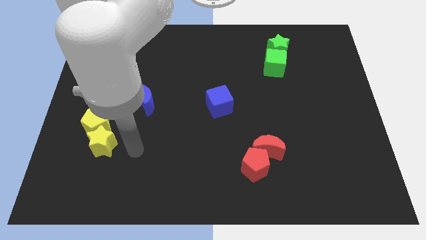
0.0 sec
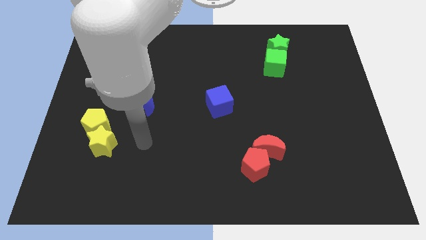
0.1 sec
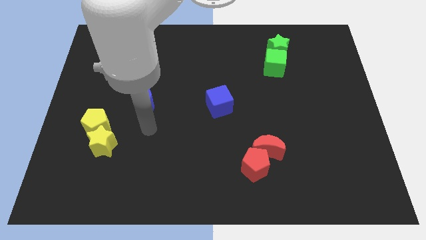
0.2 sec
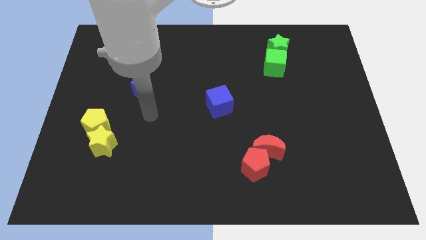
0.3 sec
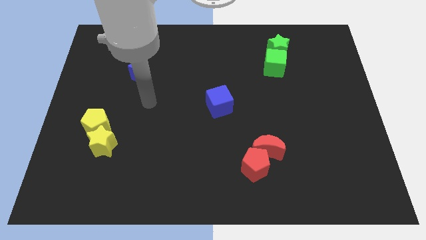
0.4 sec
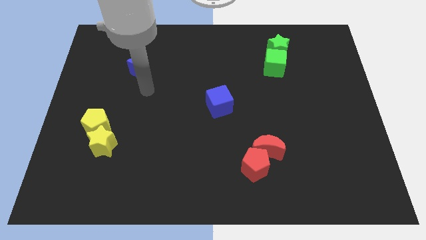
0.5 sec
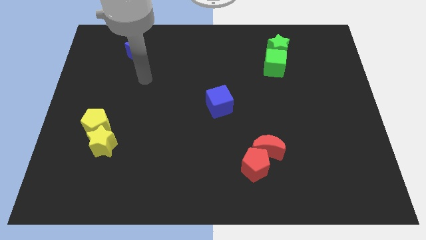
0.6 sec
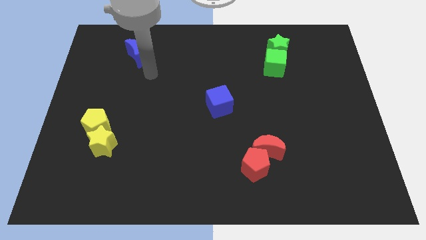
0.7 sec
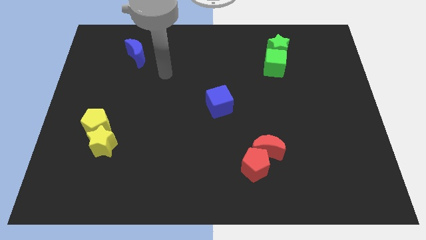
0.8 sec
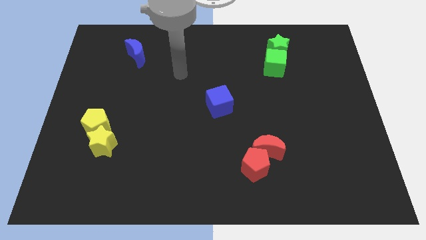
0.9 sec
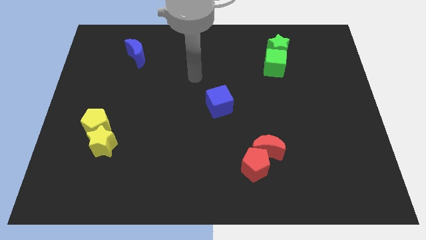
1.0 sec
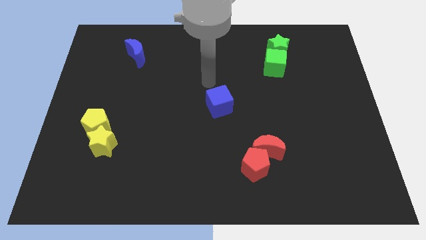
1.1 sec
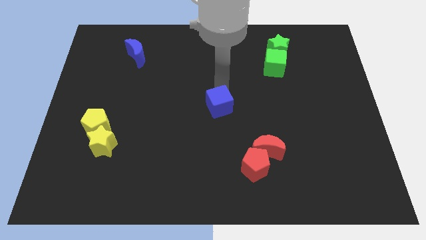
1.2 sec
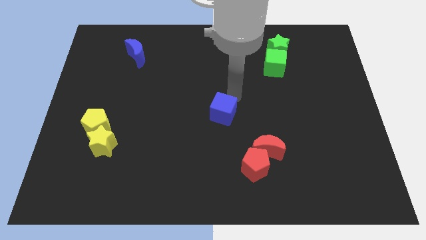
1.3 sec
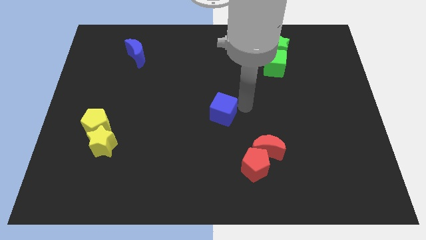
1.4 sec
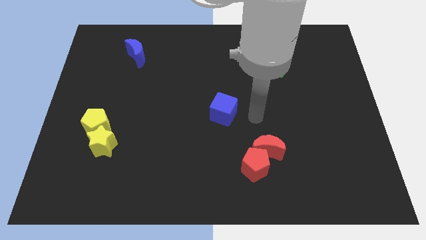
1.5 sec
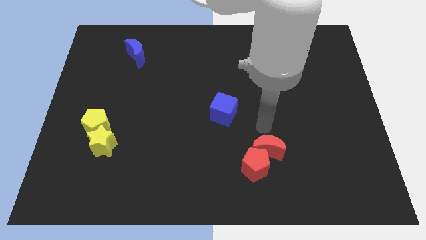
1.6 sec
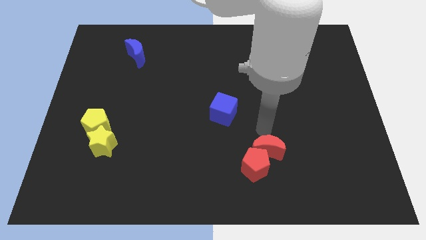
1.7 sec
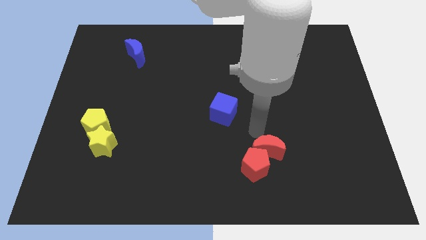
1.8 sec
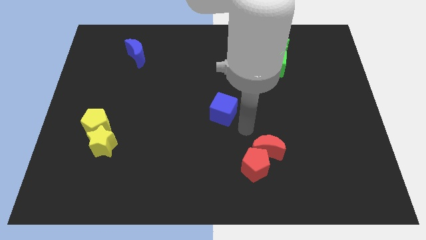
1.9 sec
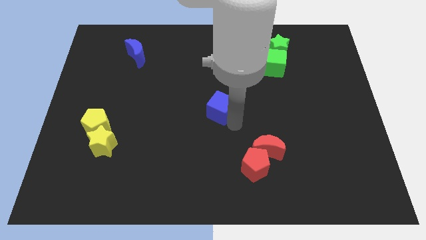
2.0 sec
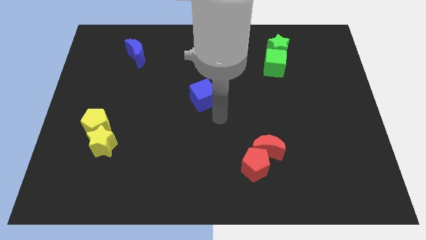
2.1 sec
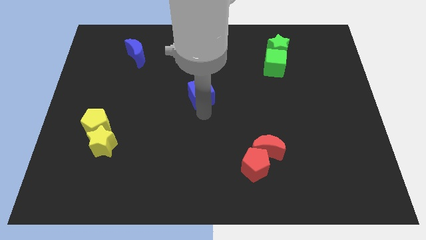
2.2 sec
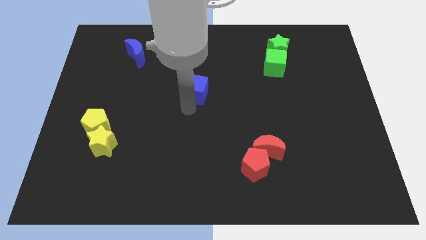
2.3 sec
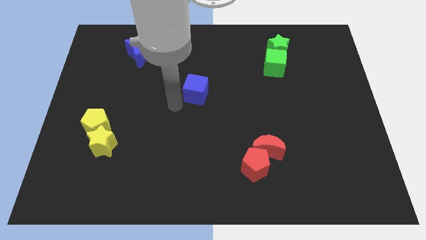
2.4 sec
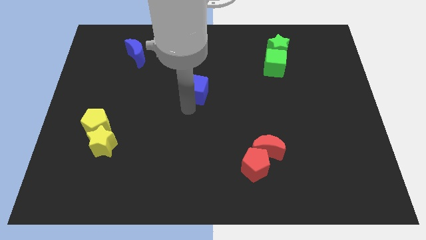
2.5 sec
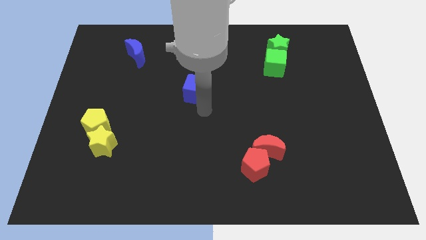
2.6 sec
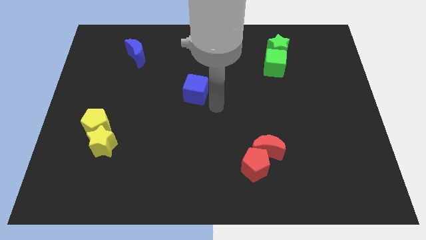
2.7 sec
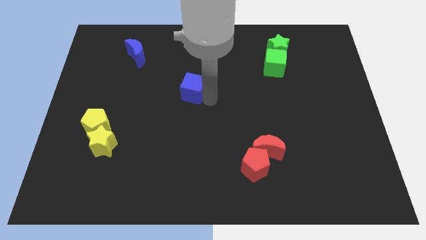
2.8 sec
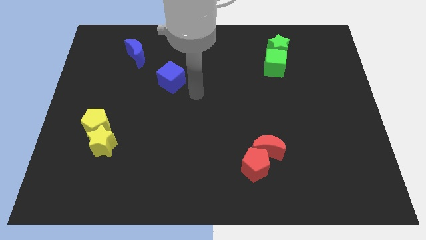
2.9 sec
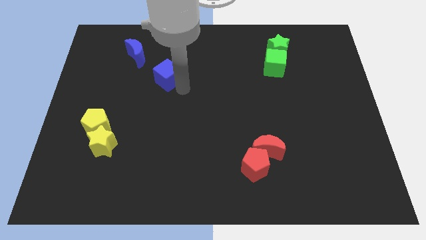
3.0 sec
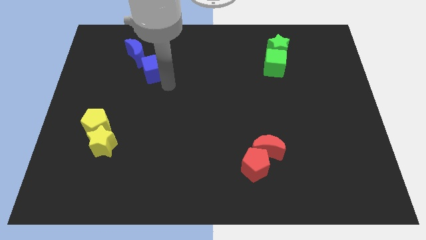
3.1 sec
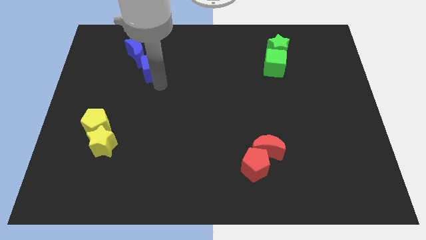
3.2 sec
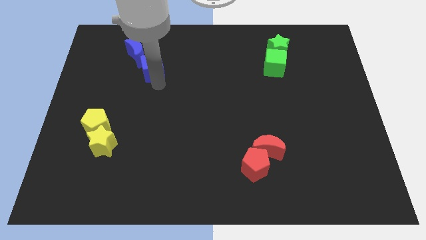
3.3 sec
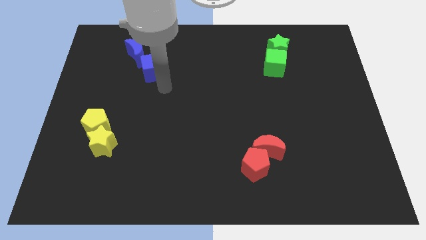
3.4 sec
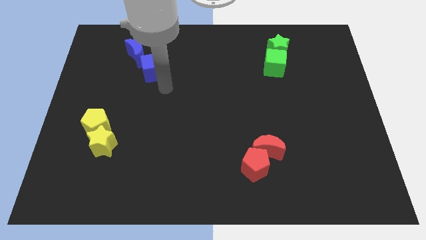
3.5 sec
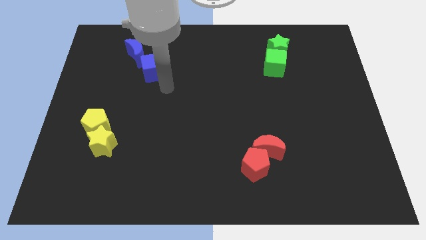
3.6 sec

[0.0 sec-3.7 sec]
push the blue cube towards the blue crescent

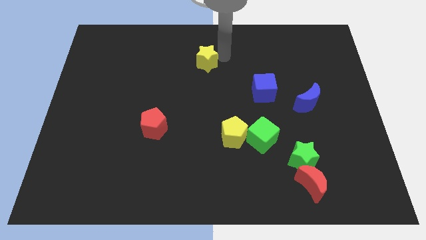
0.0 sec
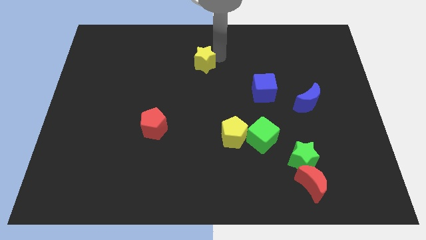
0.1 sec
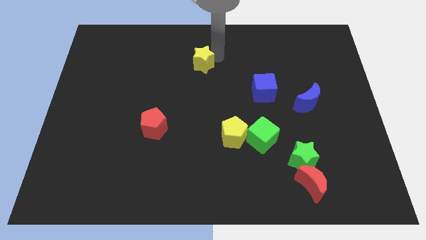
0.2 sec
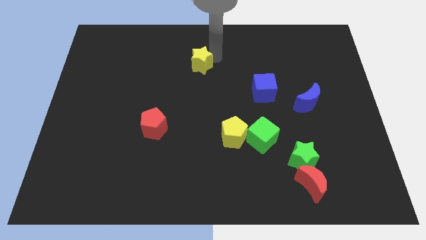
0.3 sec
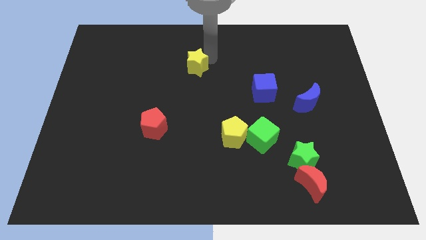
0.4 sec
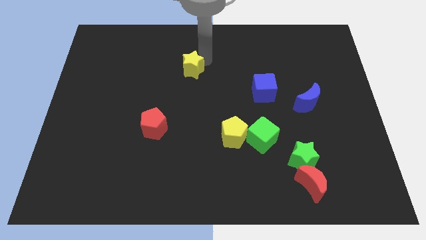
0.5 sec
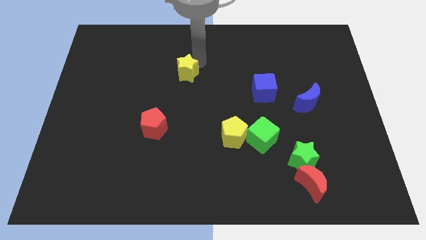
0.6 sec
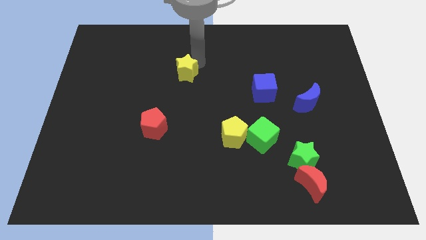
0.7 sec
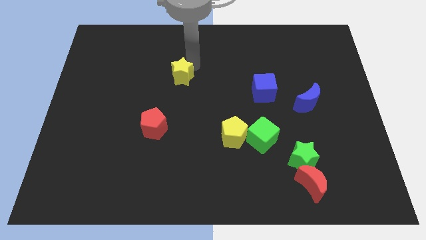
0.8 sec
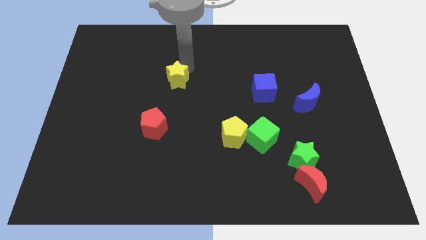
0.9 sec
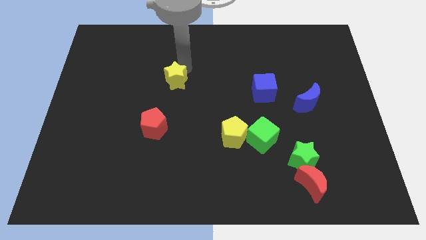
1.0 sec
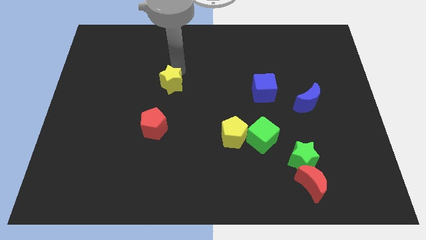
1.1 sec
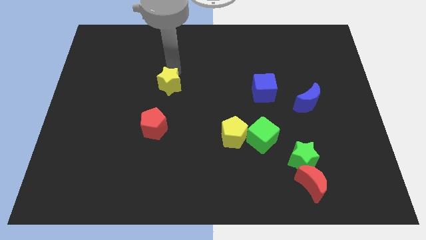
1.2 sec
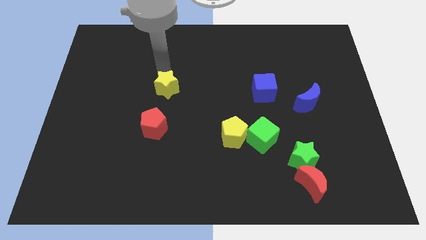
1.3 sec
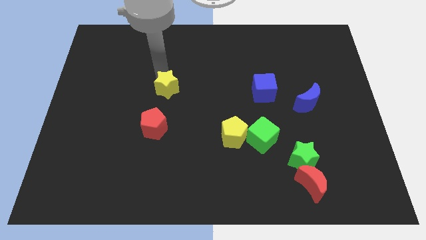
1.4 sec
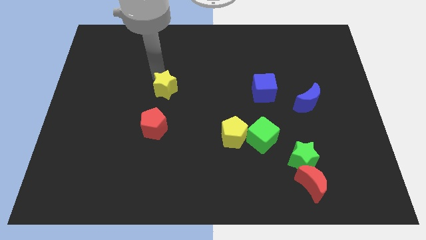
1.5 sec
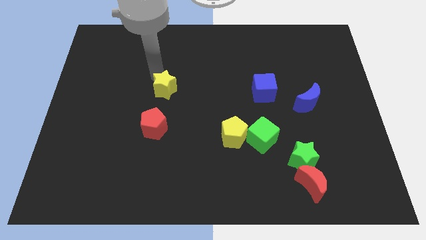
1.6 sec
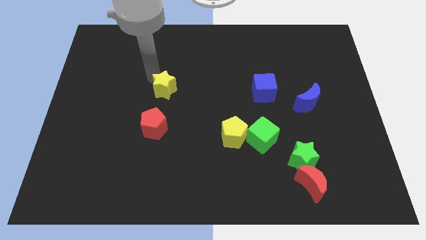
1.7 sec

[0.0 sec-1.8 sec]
place the yellow star above red pentagon

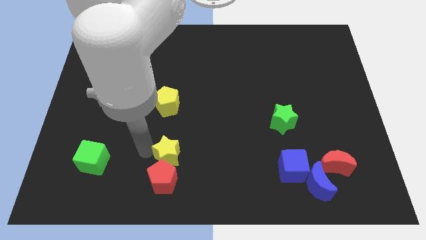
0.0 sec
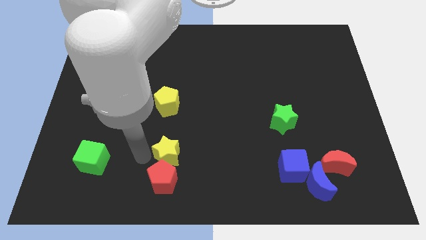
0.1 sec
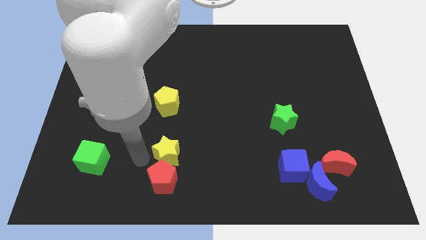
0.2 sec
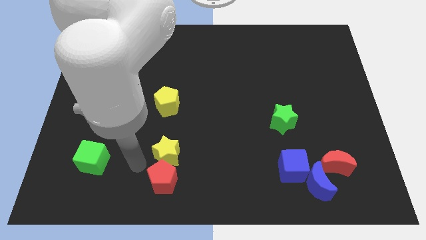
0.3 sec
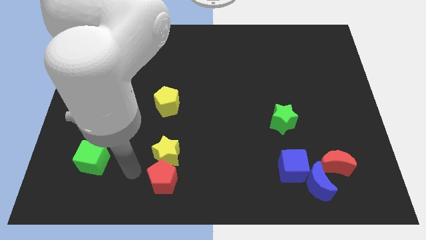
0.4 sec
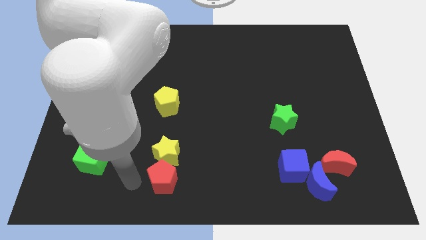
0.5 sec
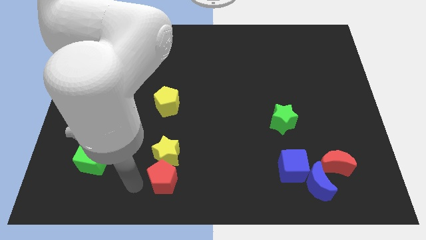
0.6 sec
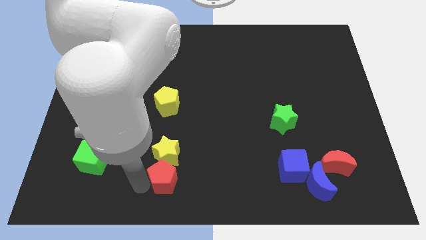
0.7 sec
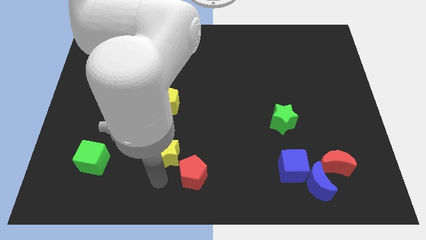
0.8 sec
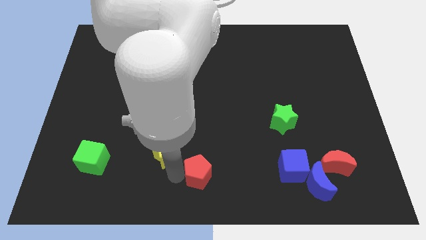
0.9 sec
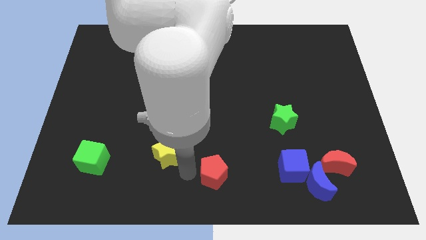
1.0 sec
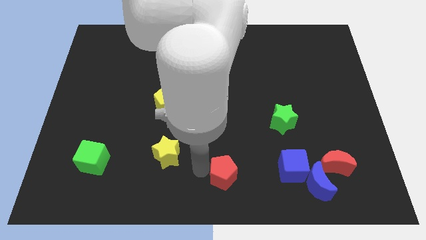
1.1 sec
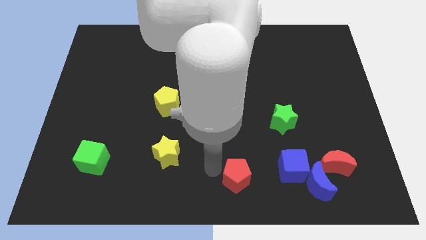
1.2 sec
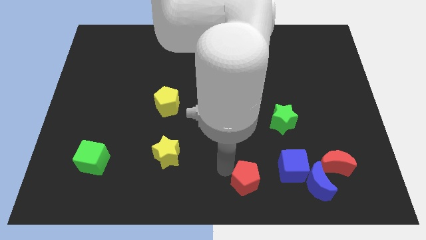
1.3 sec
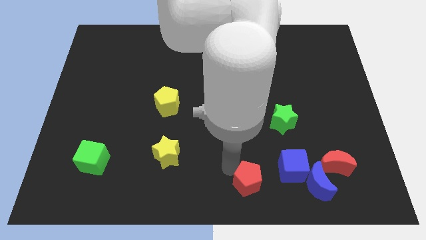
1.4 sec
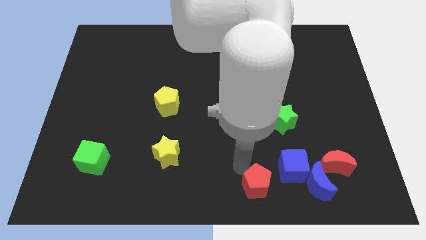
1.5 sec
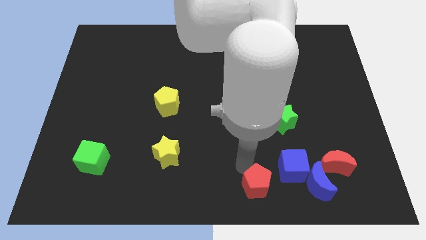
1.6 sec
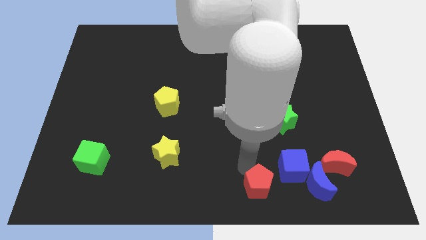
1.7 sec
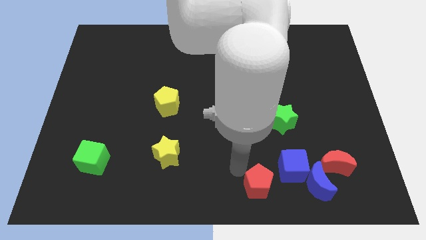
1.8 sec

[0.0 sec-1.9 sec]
push the red pentagon towards the blue blocks

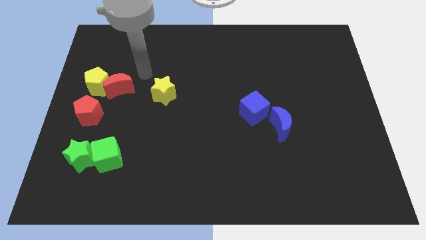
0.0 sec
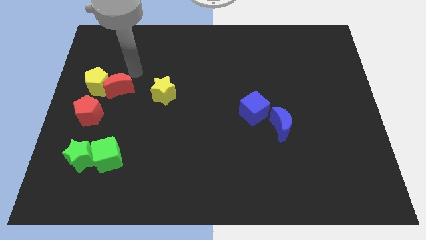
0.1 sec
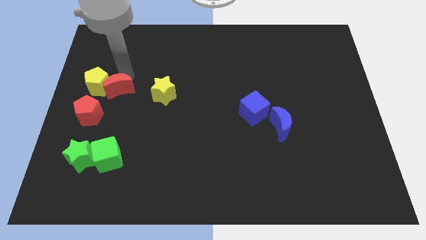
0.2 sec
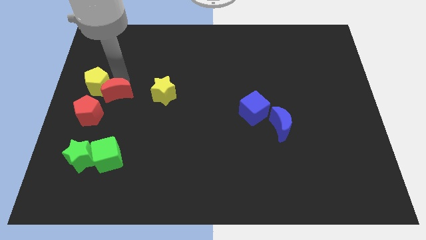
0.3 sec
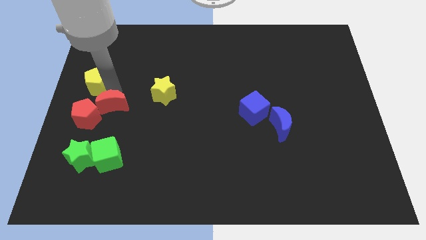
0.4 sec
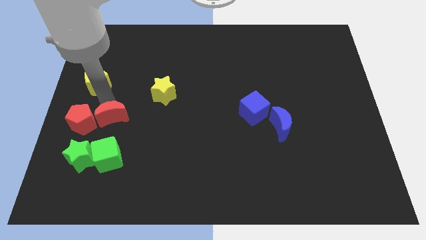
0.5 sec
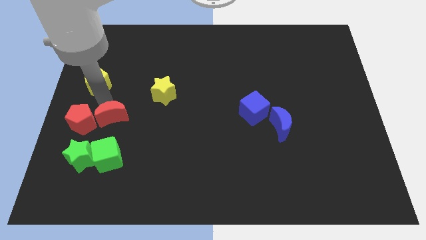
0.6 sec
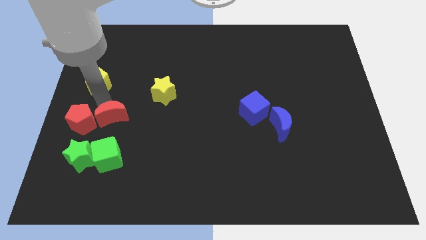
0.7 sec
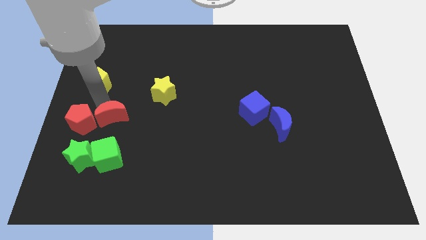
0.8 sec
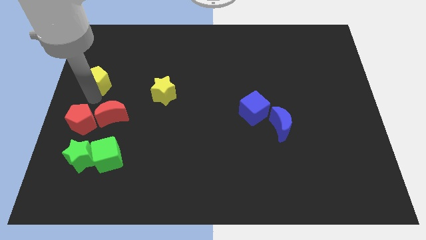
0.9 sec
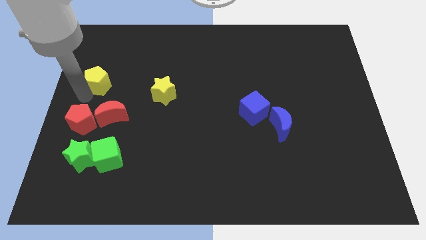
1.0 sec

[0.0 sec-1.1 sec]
push the red crescent to the right of the red pentagon

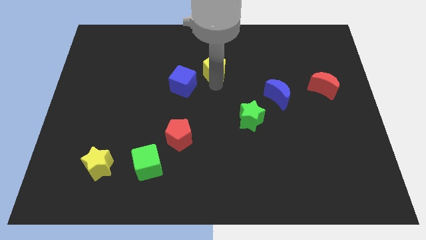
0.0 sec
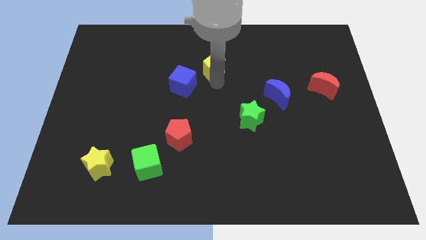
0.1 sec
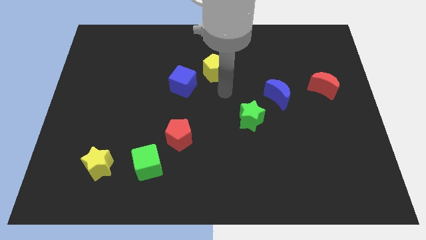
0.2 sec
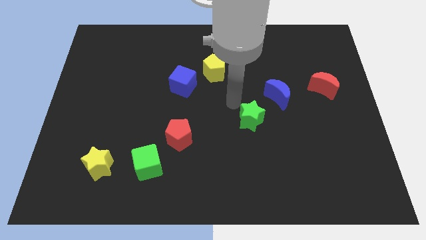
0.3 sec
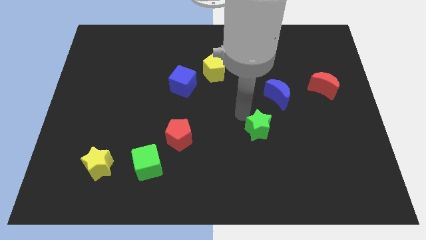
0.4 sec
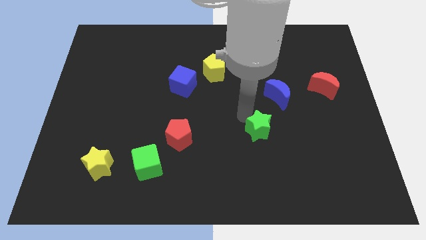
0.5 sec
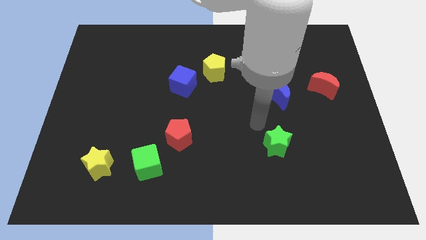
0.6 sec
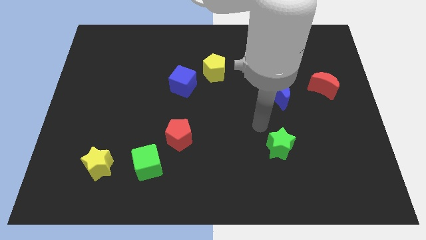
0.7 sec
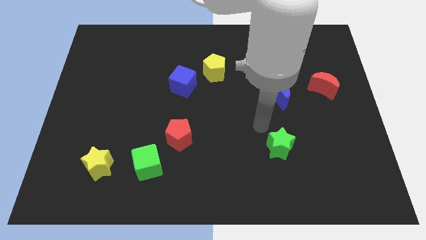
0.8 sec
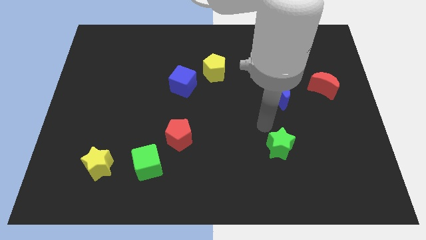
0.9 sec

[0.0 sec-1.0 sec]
put the green star below the blue crescent
